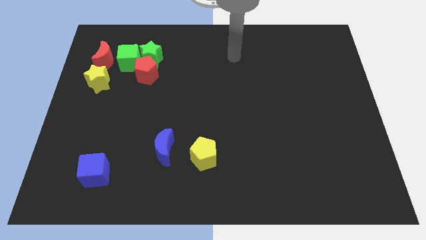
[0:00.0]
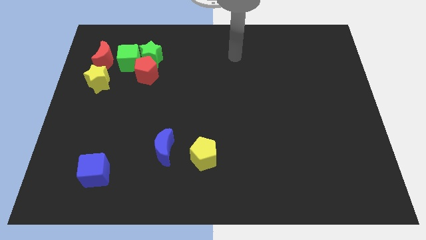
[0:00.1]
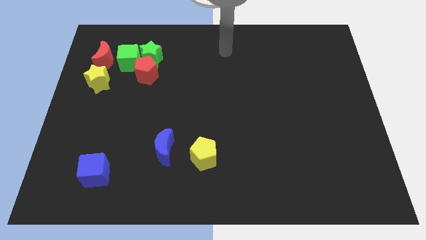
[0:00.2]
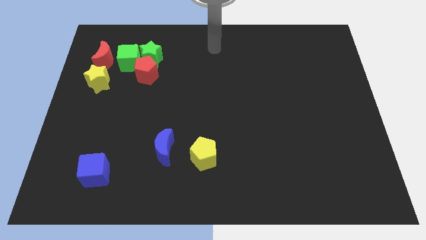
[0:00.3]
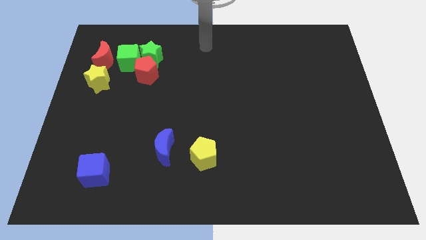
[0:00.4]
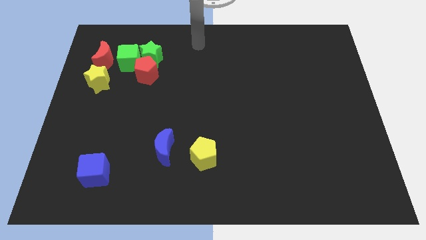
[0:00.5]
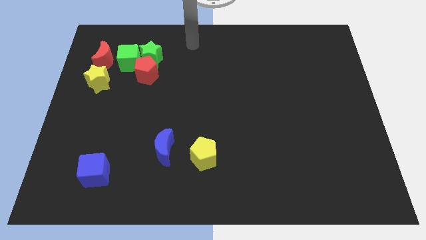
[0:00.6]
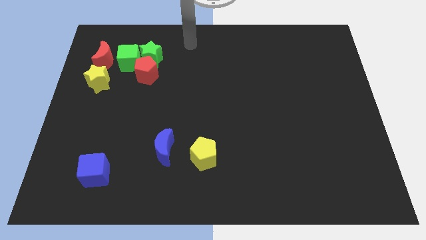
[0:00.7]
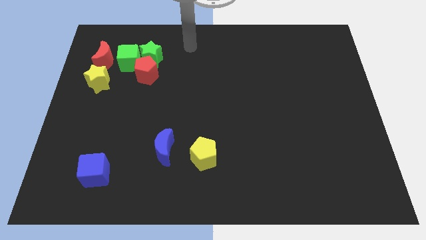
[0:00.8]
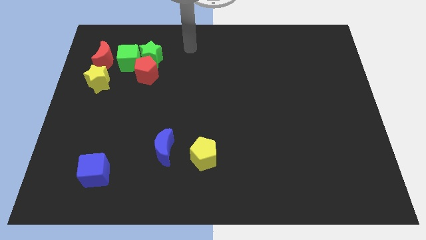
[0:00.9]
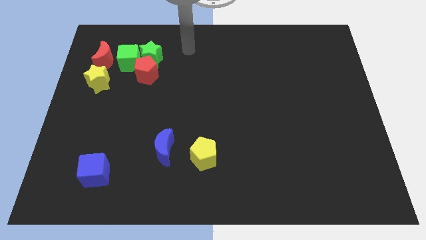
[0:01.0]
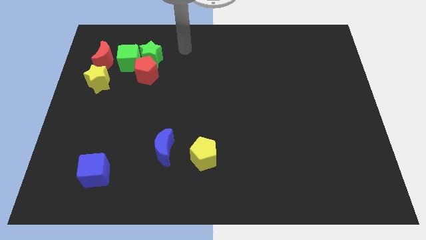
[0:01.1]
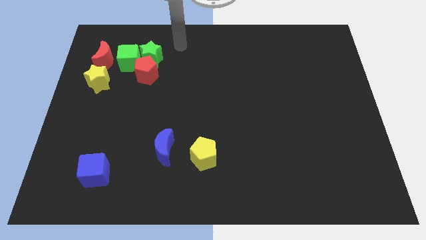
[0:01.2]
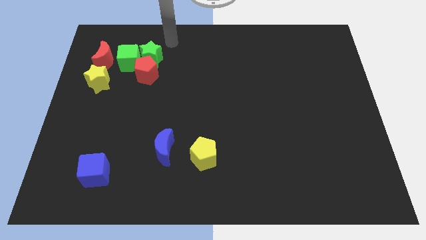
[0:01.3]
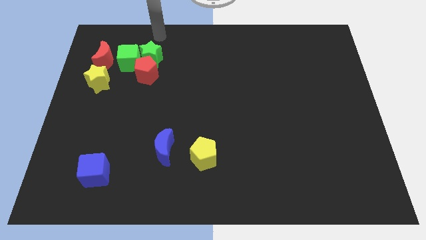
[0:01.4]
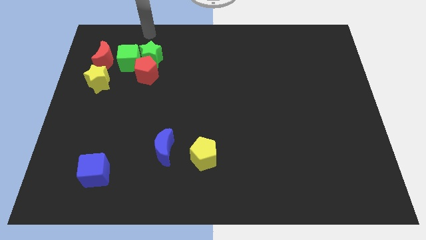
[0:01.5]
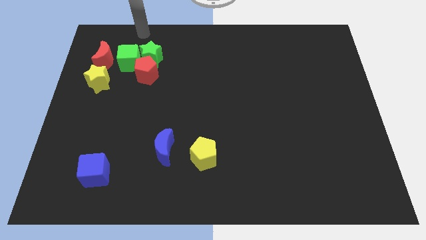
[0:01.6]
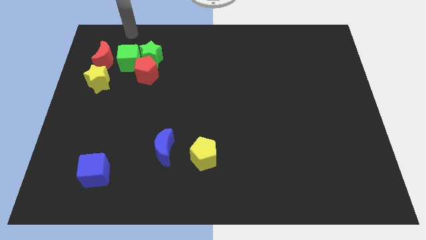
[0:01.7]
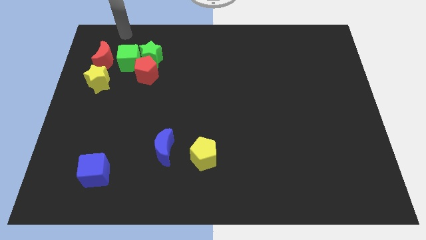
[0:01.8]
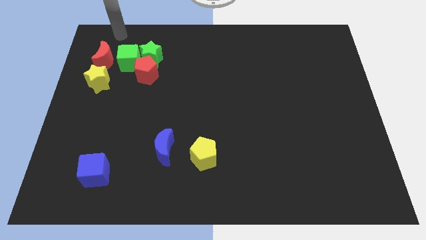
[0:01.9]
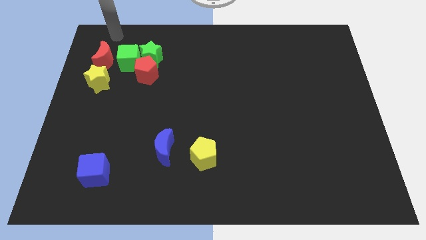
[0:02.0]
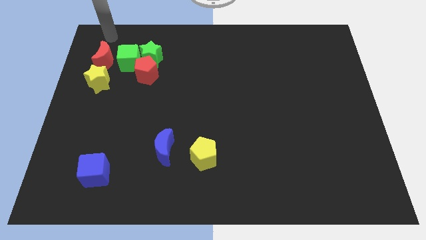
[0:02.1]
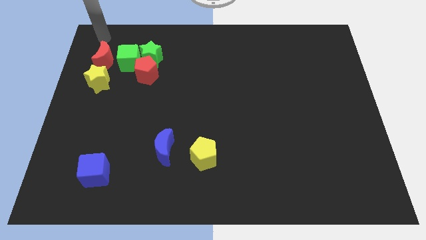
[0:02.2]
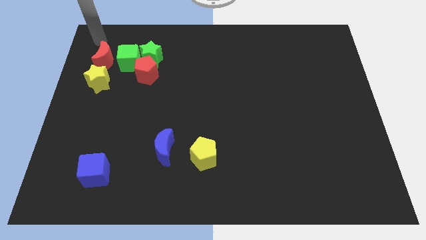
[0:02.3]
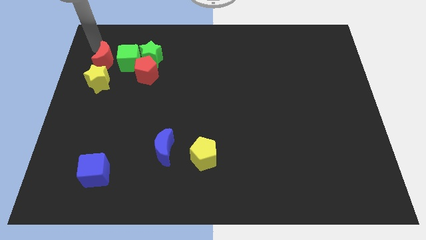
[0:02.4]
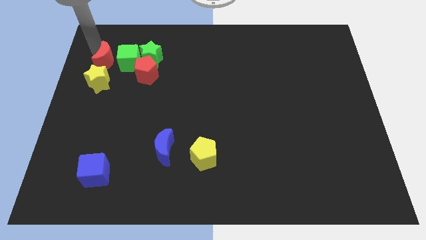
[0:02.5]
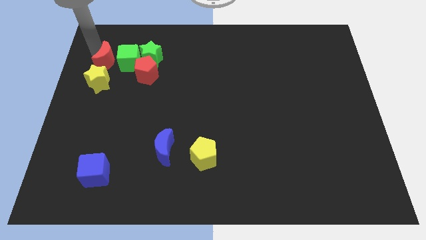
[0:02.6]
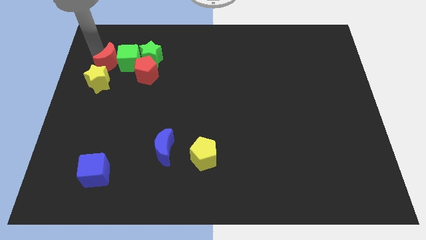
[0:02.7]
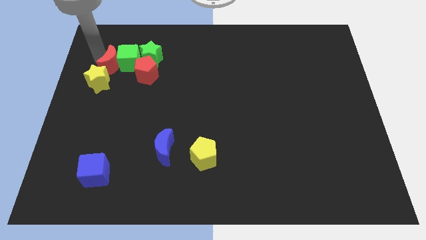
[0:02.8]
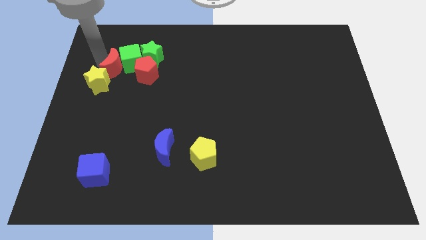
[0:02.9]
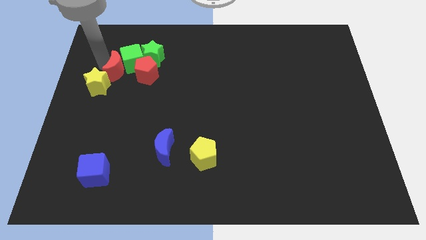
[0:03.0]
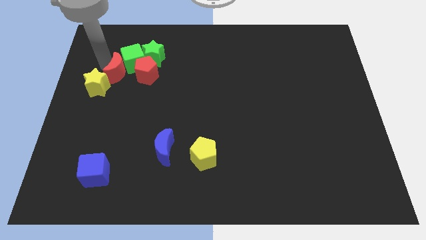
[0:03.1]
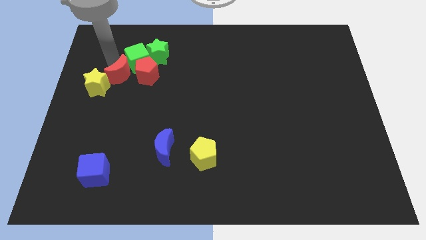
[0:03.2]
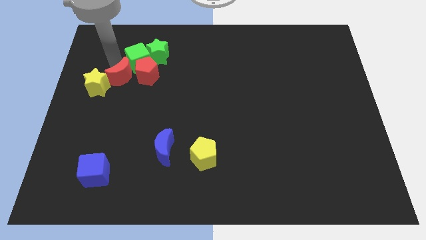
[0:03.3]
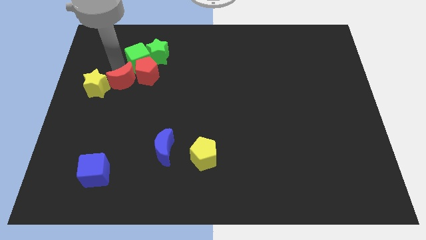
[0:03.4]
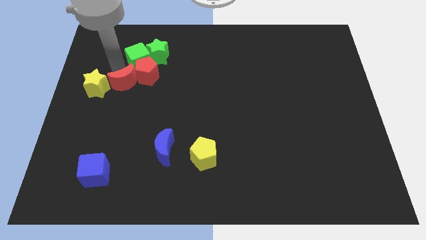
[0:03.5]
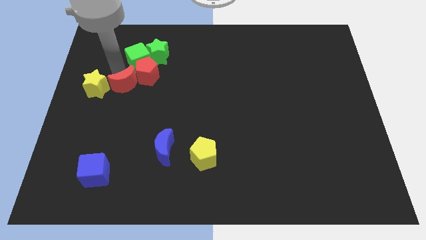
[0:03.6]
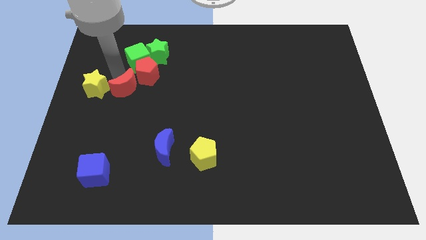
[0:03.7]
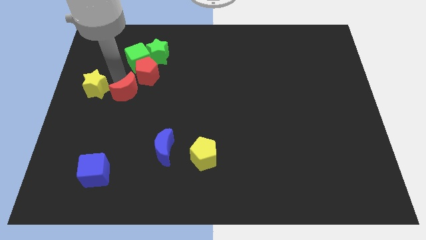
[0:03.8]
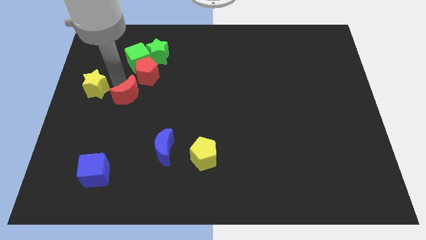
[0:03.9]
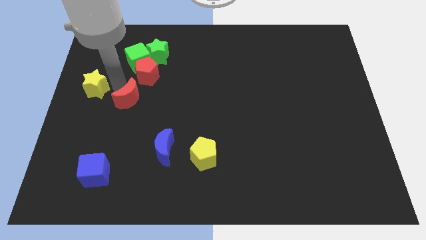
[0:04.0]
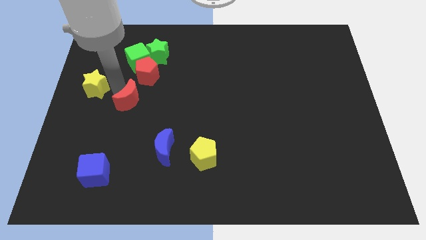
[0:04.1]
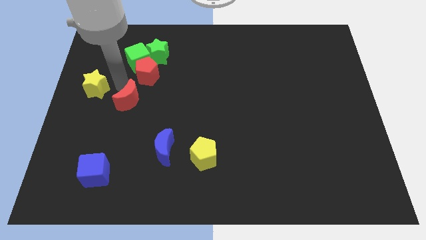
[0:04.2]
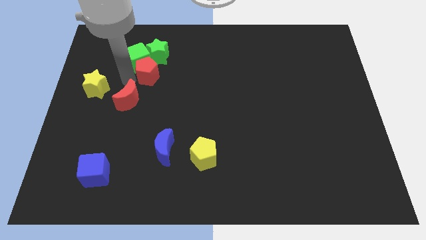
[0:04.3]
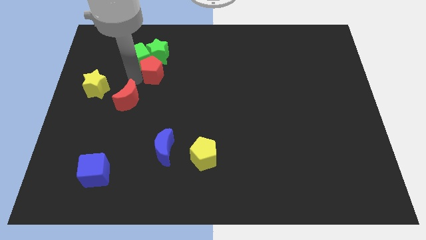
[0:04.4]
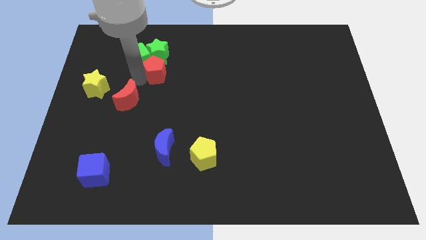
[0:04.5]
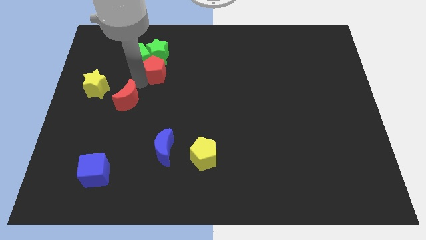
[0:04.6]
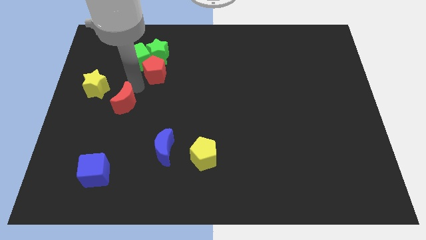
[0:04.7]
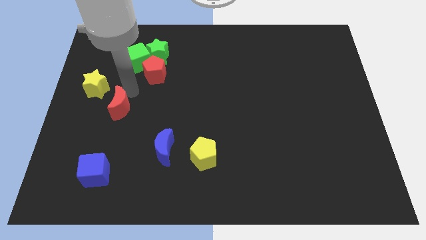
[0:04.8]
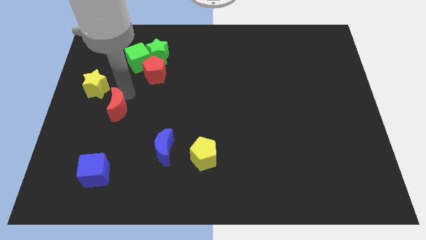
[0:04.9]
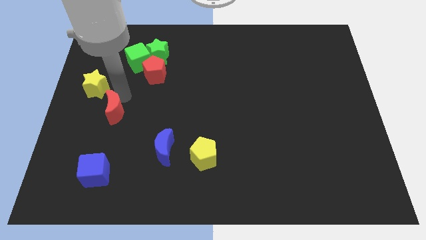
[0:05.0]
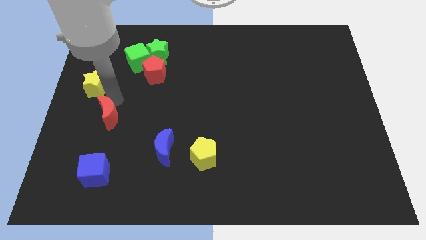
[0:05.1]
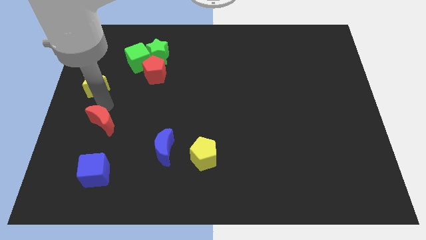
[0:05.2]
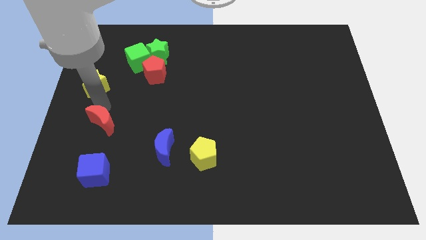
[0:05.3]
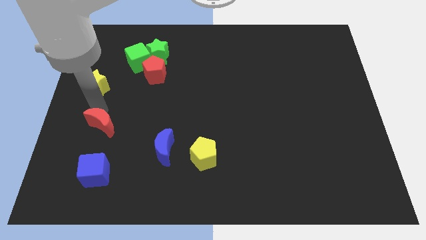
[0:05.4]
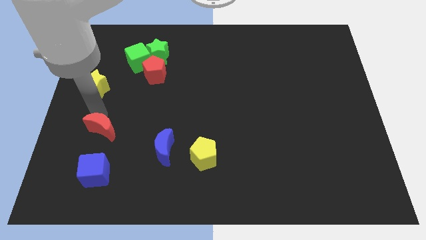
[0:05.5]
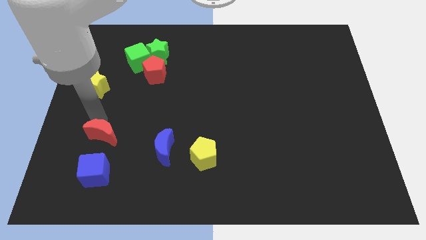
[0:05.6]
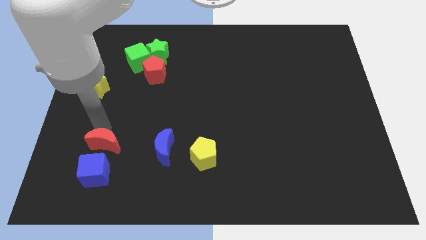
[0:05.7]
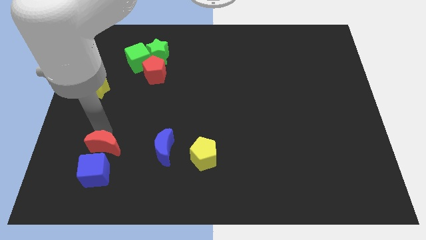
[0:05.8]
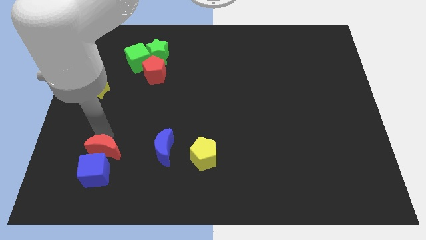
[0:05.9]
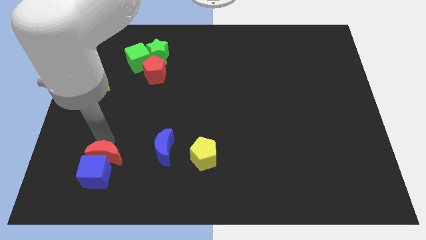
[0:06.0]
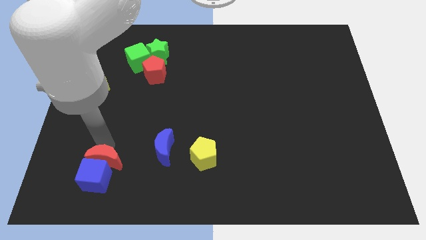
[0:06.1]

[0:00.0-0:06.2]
push the red moon towards the blue cube

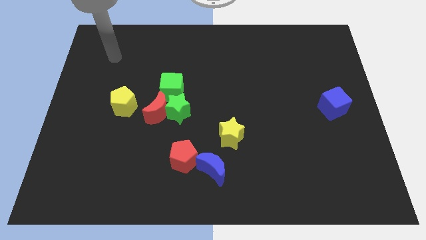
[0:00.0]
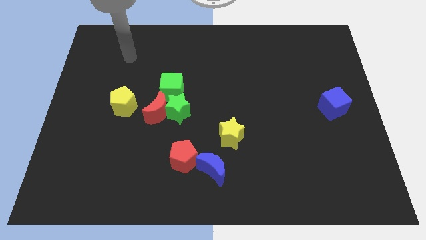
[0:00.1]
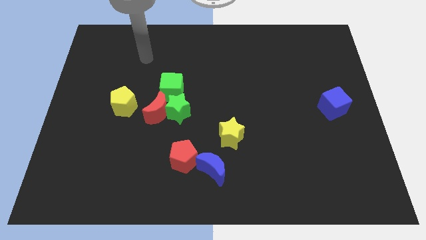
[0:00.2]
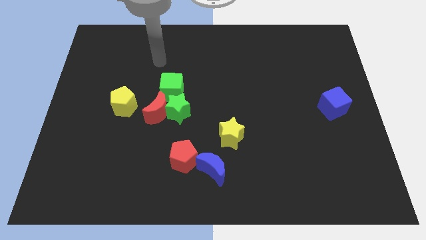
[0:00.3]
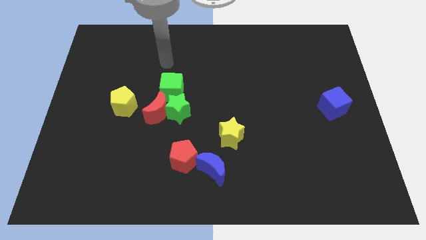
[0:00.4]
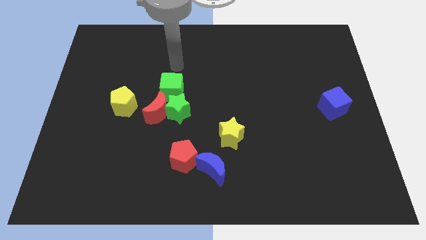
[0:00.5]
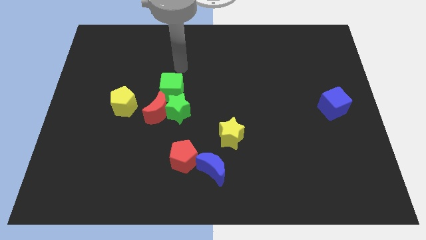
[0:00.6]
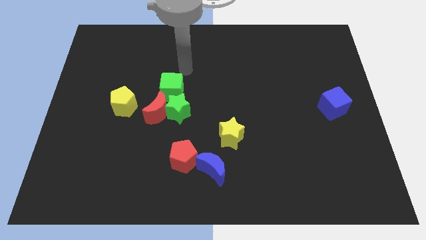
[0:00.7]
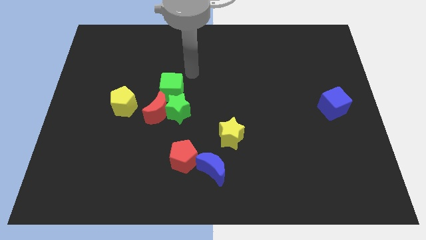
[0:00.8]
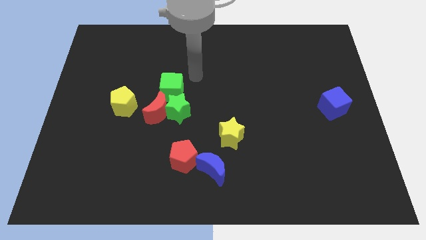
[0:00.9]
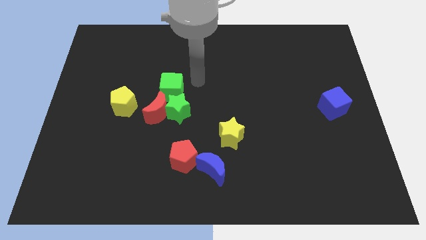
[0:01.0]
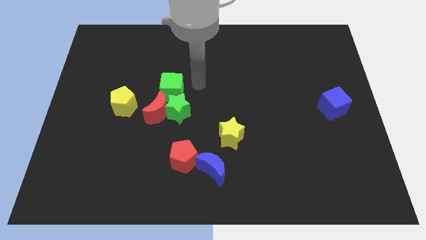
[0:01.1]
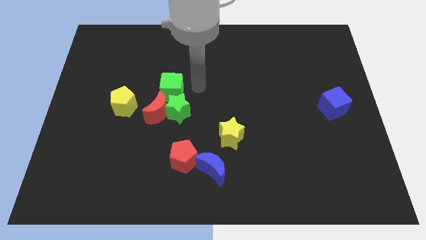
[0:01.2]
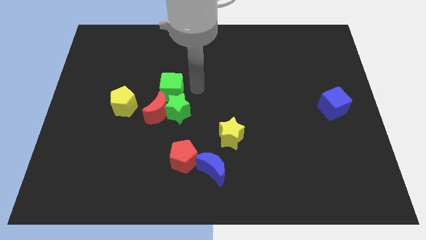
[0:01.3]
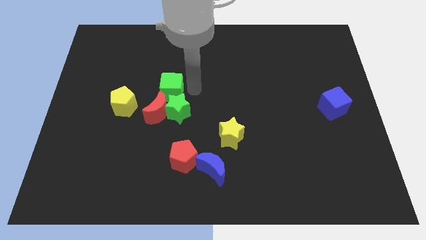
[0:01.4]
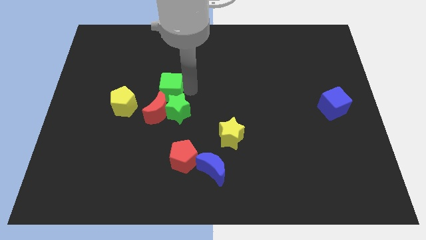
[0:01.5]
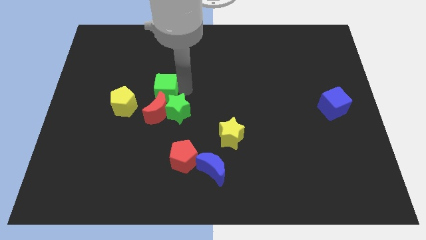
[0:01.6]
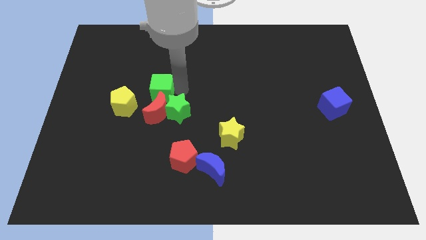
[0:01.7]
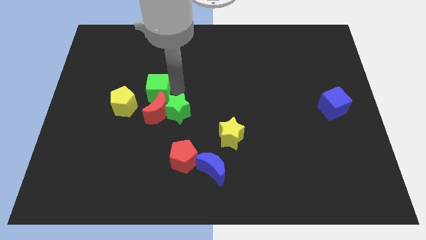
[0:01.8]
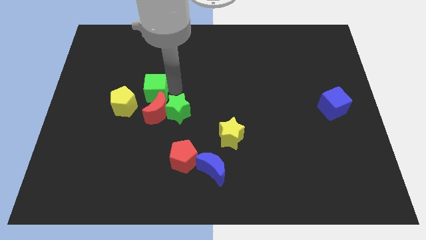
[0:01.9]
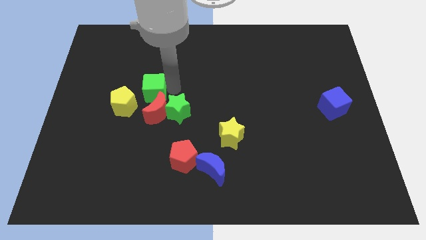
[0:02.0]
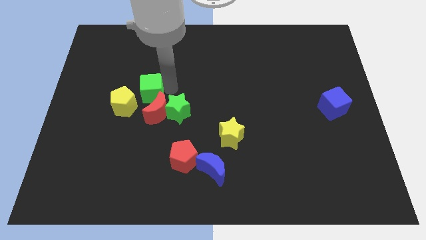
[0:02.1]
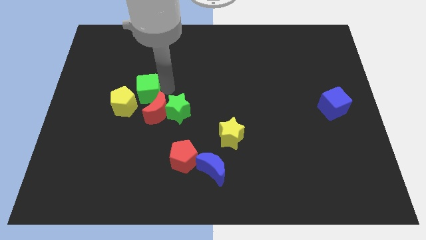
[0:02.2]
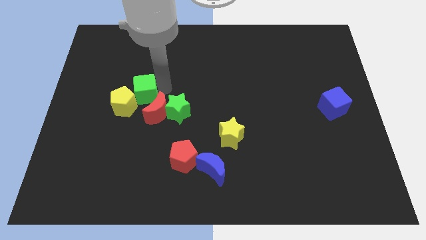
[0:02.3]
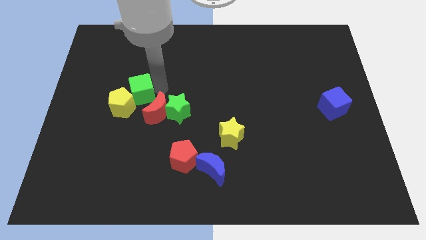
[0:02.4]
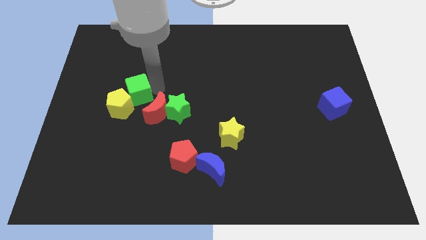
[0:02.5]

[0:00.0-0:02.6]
move the green cube close to the yellow pentagon
